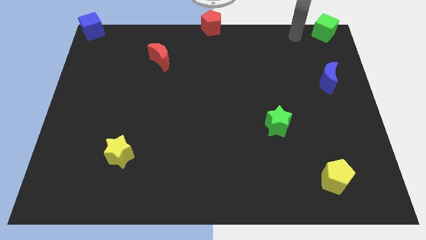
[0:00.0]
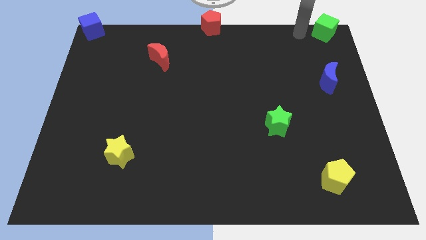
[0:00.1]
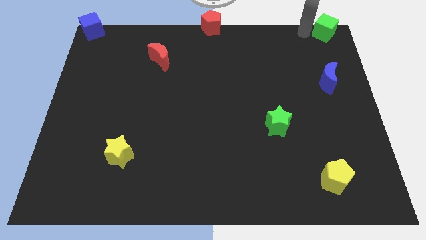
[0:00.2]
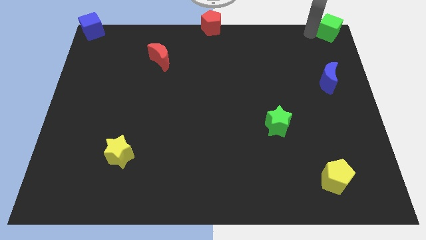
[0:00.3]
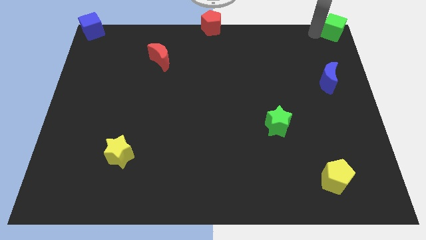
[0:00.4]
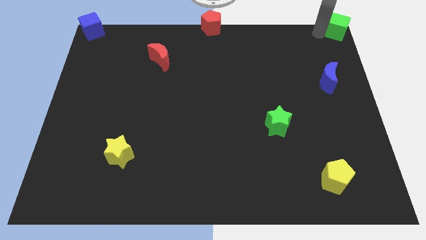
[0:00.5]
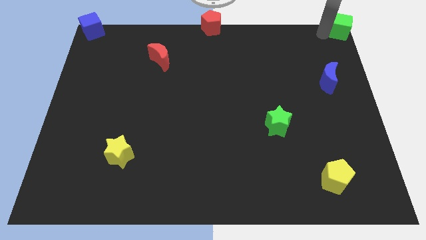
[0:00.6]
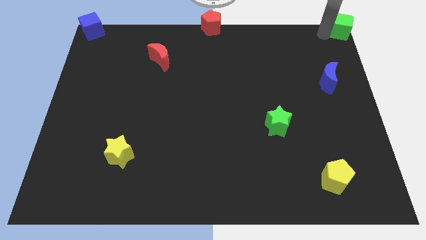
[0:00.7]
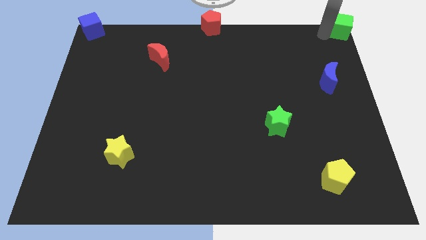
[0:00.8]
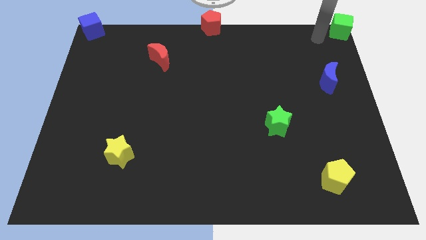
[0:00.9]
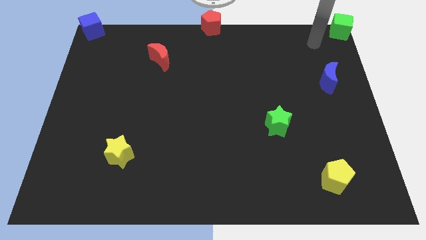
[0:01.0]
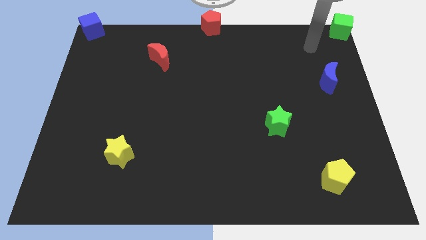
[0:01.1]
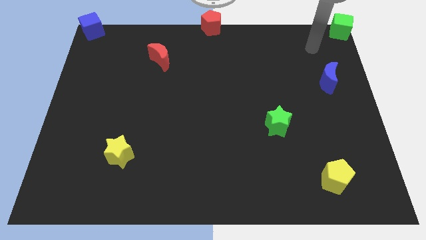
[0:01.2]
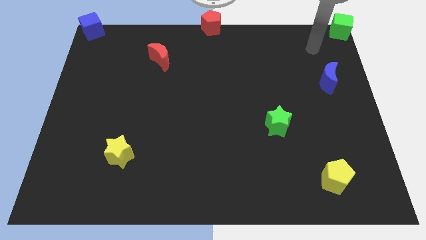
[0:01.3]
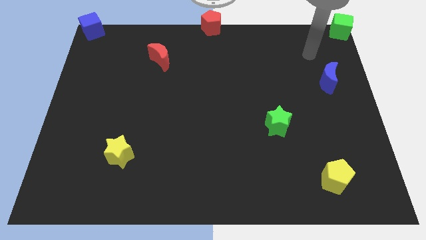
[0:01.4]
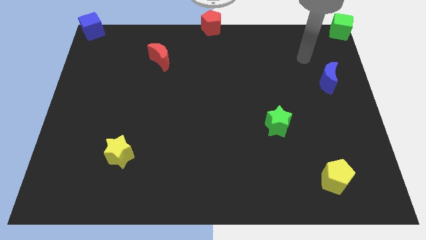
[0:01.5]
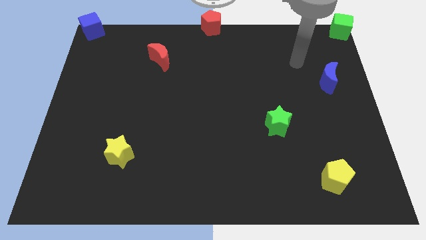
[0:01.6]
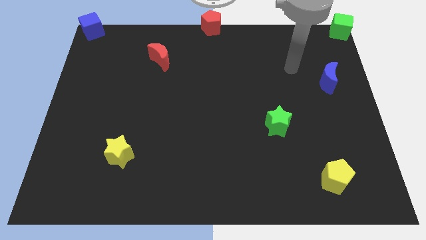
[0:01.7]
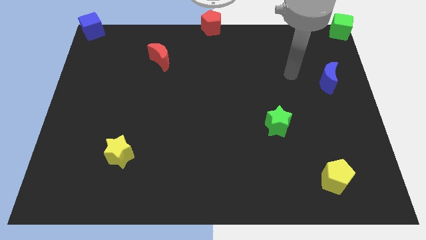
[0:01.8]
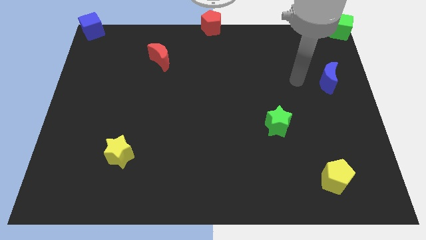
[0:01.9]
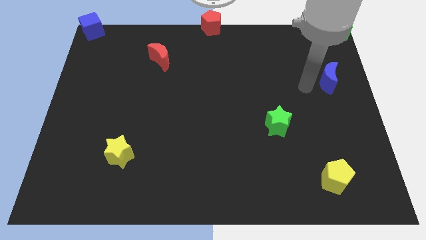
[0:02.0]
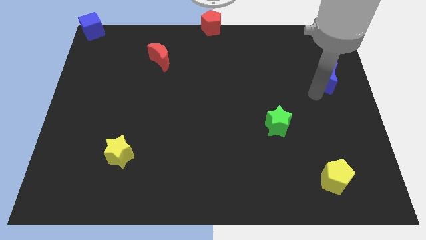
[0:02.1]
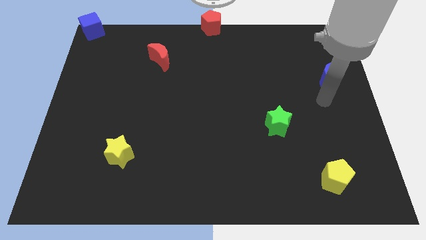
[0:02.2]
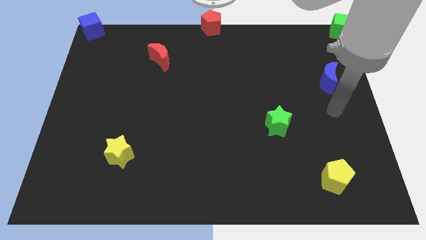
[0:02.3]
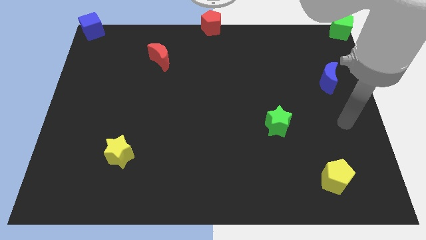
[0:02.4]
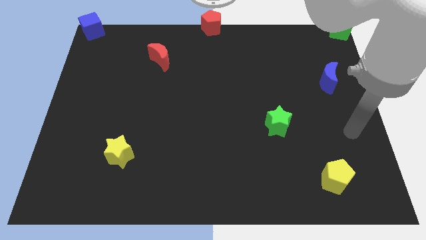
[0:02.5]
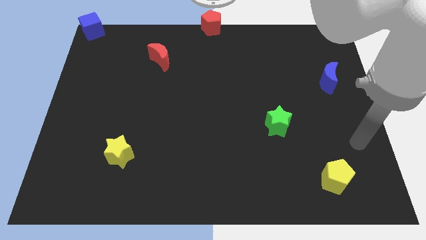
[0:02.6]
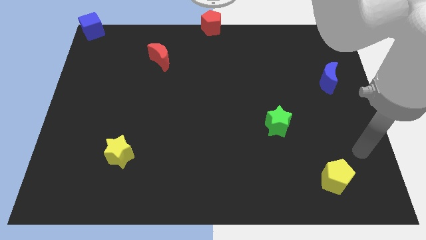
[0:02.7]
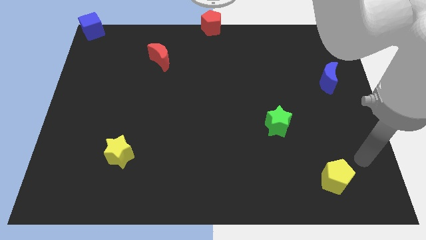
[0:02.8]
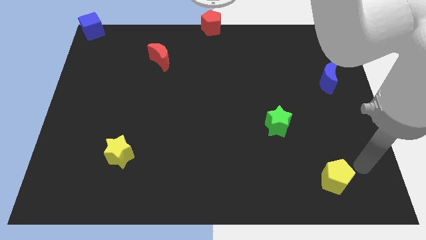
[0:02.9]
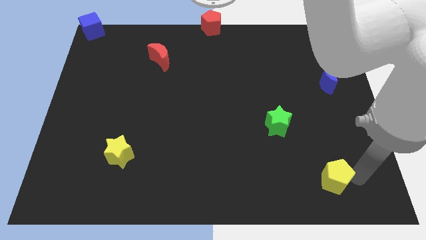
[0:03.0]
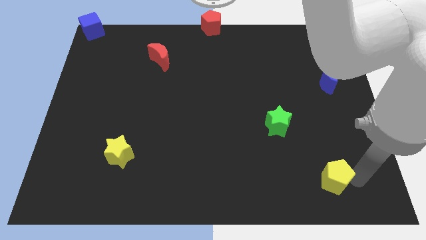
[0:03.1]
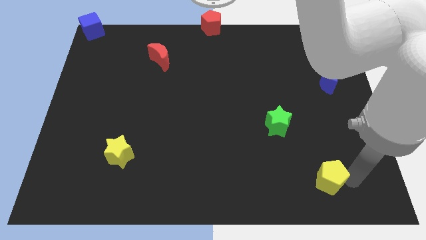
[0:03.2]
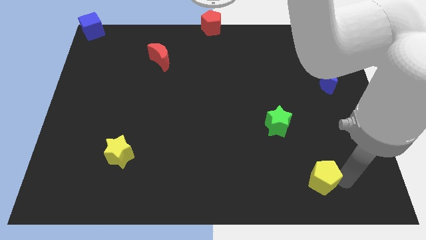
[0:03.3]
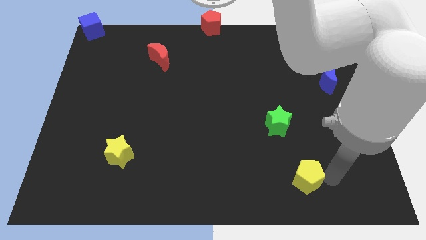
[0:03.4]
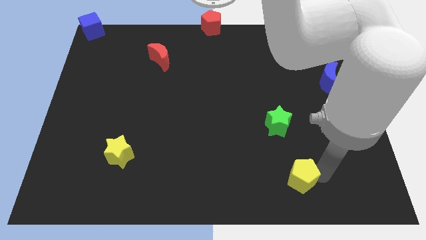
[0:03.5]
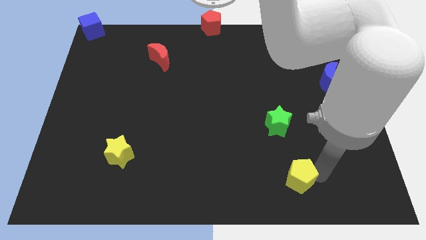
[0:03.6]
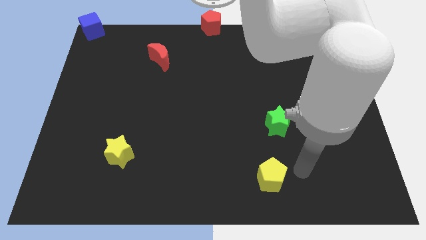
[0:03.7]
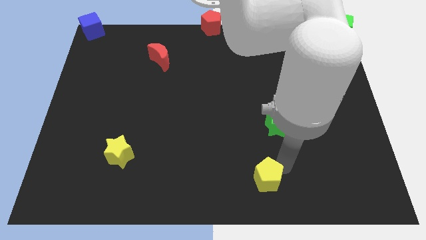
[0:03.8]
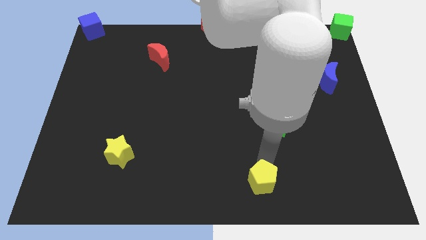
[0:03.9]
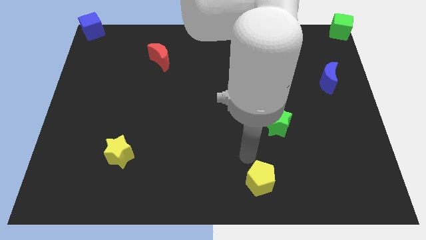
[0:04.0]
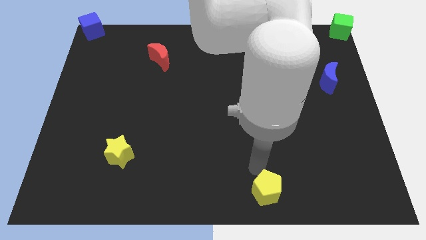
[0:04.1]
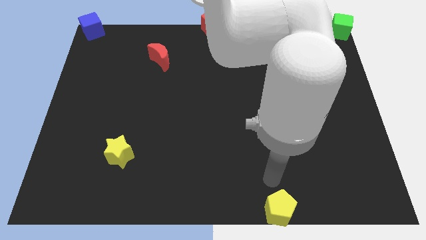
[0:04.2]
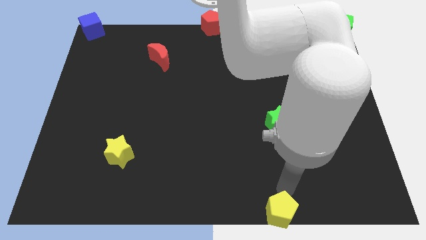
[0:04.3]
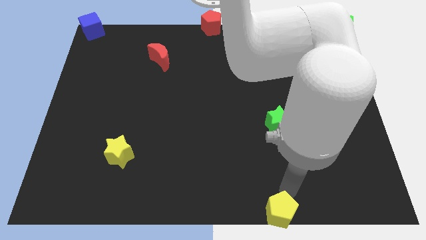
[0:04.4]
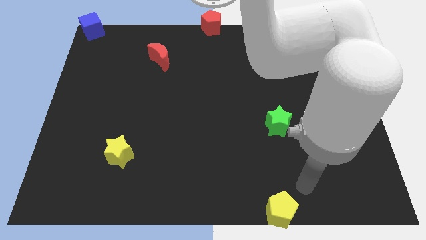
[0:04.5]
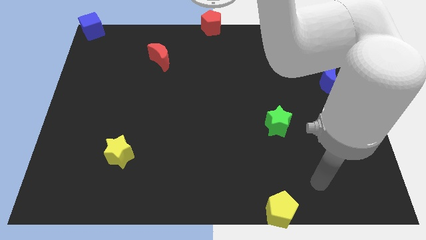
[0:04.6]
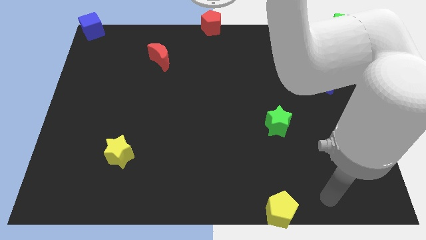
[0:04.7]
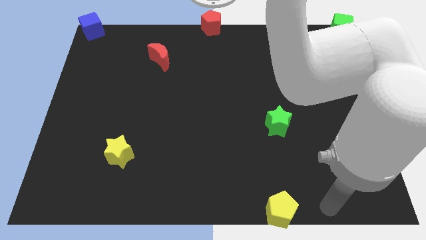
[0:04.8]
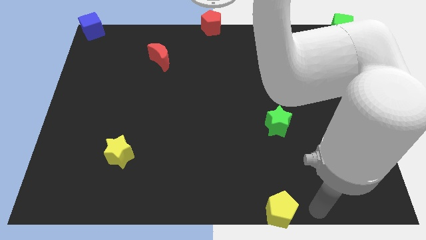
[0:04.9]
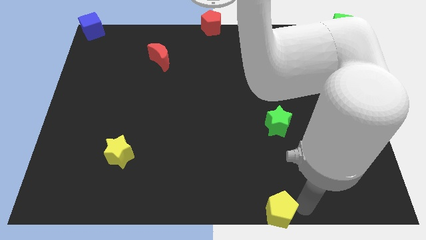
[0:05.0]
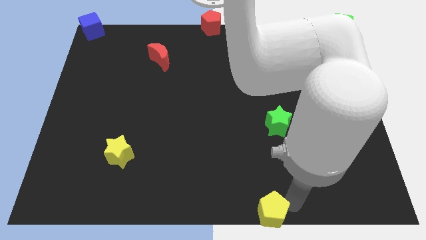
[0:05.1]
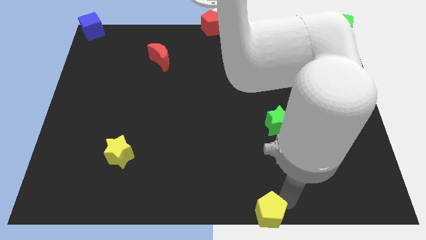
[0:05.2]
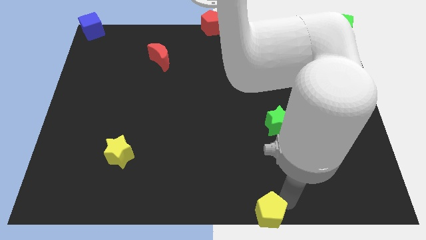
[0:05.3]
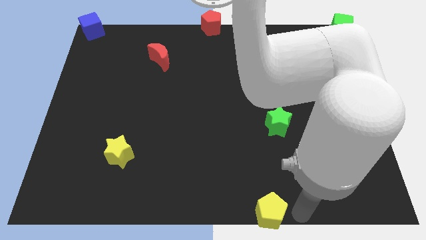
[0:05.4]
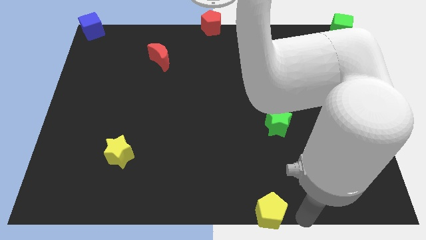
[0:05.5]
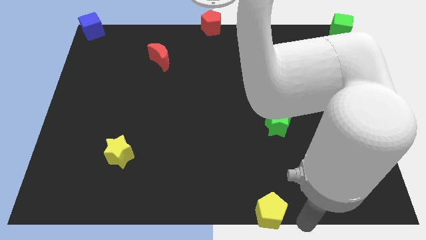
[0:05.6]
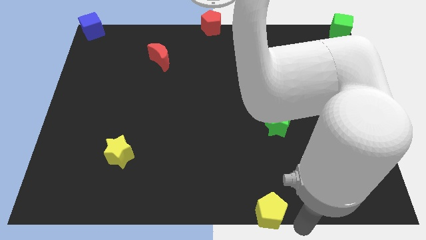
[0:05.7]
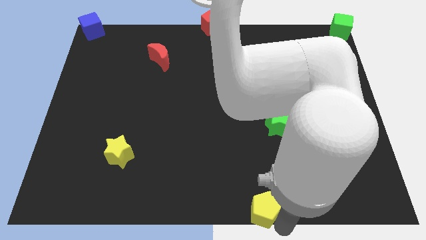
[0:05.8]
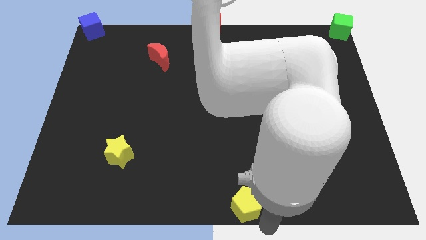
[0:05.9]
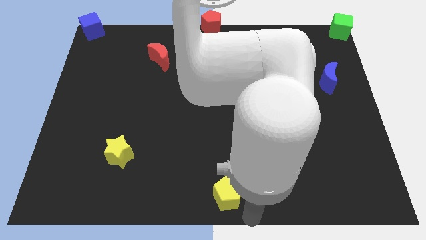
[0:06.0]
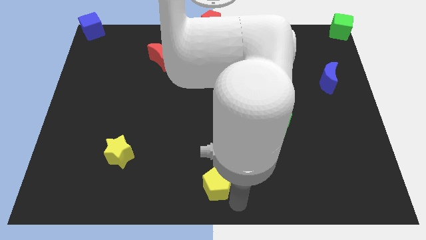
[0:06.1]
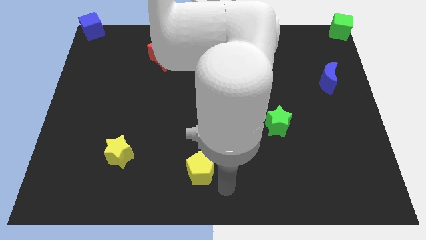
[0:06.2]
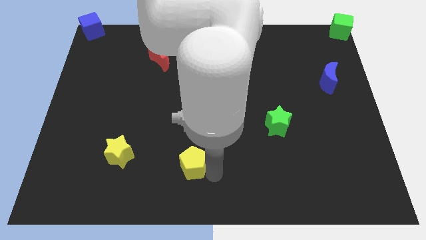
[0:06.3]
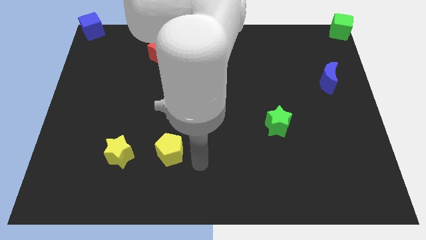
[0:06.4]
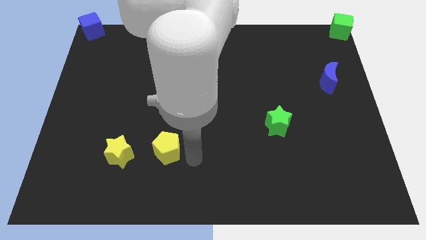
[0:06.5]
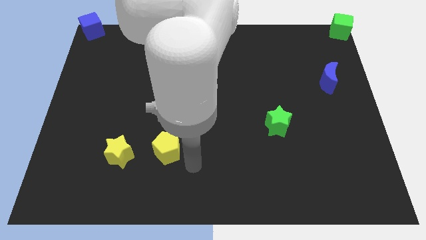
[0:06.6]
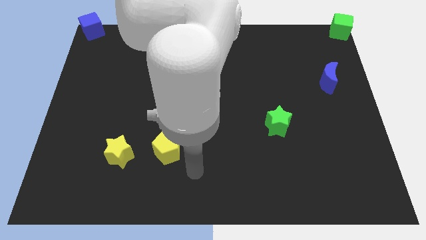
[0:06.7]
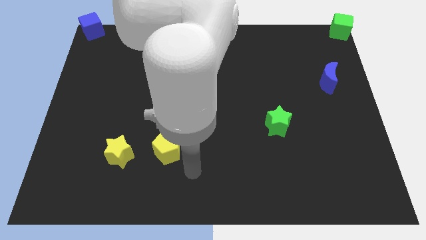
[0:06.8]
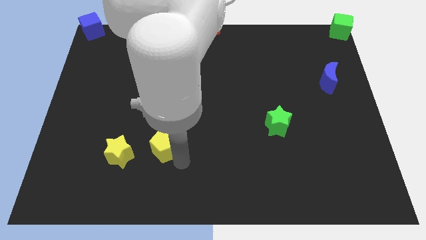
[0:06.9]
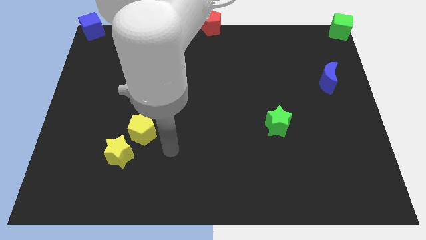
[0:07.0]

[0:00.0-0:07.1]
push yellow pentagon to the top of the yellow star

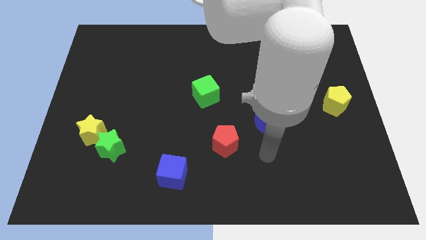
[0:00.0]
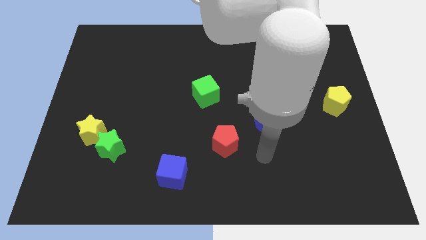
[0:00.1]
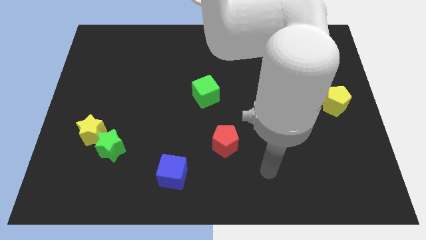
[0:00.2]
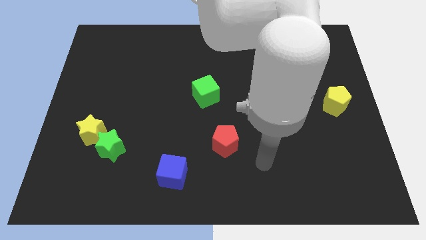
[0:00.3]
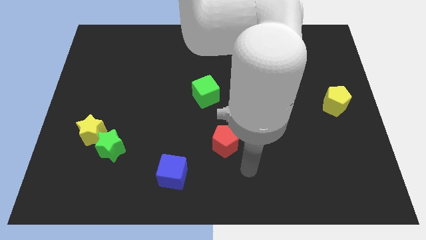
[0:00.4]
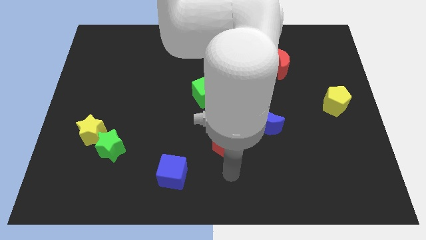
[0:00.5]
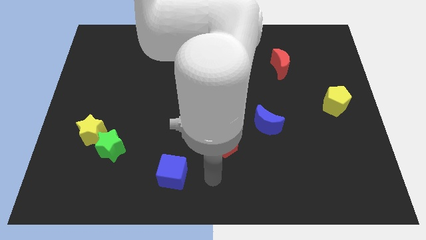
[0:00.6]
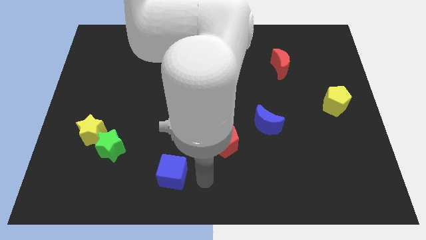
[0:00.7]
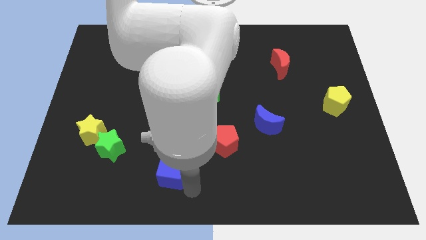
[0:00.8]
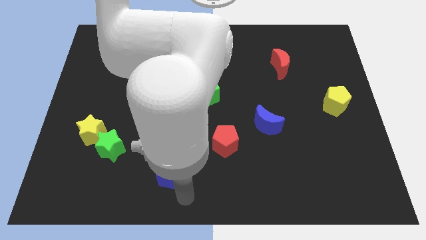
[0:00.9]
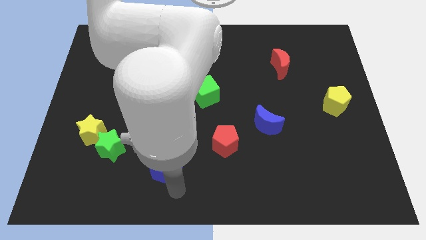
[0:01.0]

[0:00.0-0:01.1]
touch the blue cube at the bottom

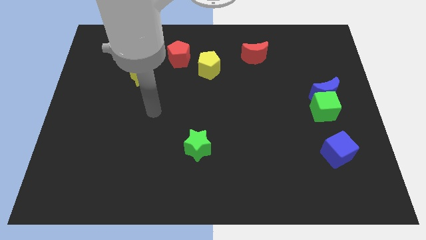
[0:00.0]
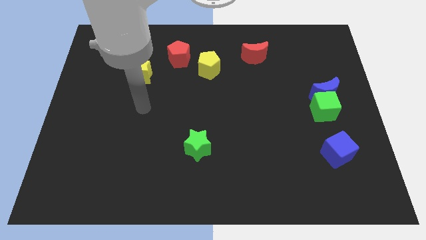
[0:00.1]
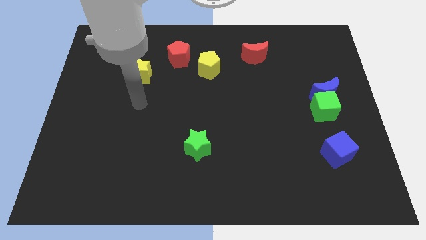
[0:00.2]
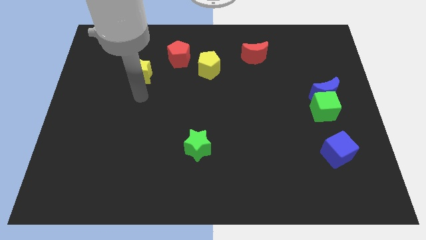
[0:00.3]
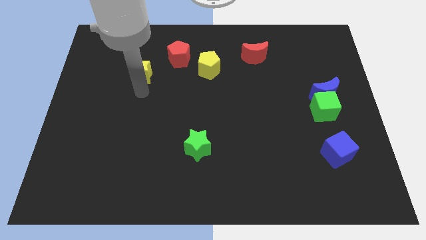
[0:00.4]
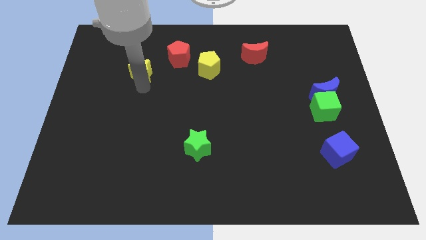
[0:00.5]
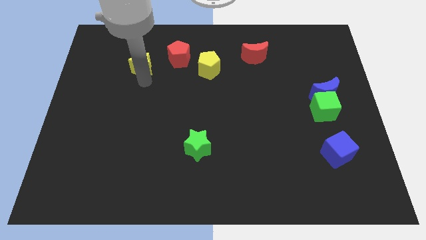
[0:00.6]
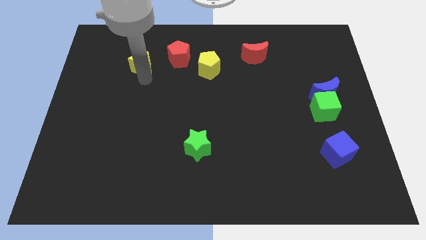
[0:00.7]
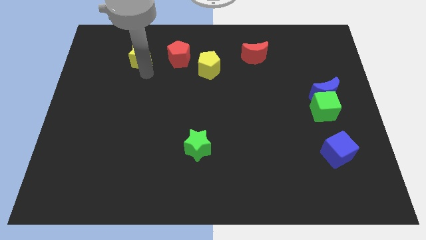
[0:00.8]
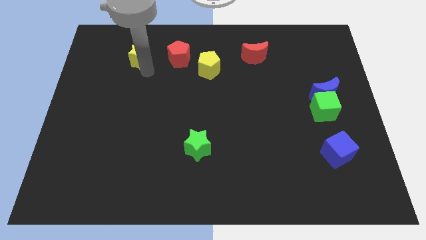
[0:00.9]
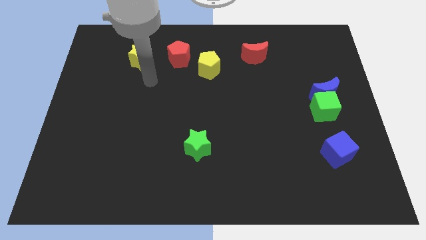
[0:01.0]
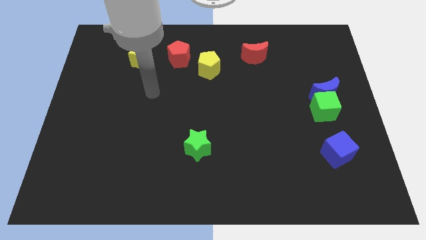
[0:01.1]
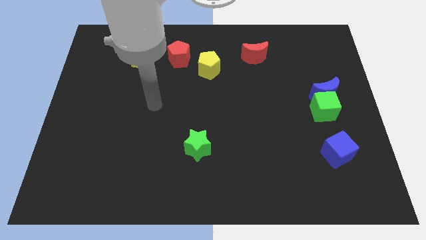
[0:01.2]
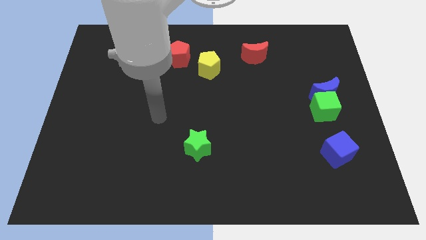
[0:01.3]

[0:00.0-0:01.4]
move the yellow star to the left side of the red pentagon
